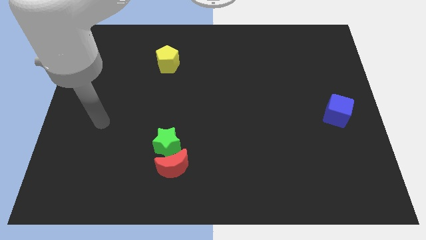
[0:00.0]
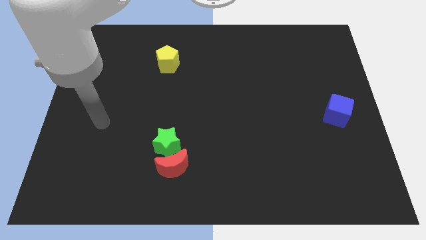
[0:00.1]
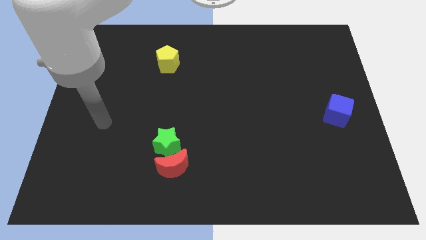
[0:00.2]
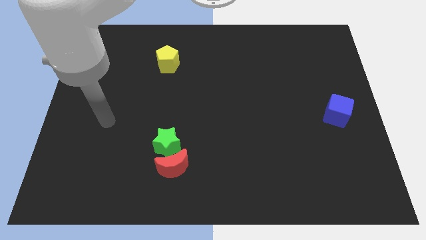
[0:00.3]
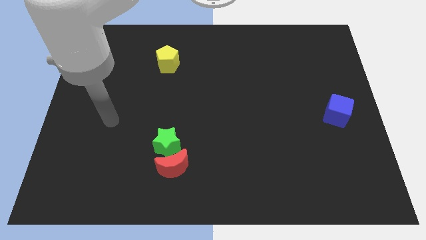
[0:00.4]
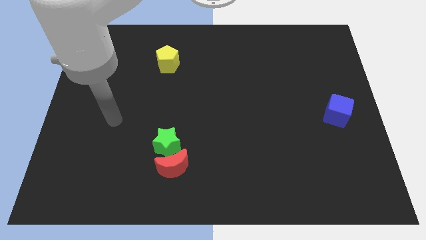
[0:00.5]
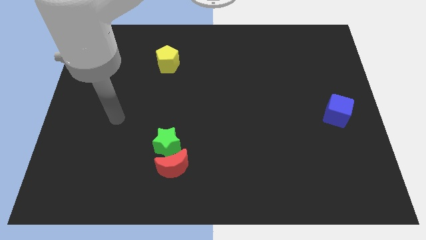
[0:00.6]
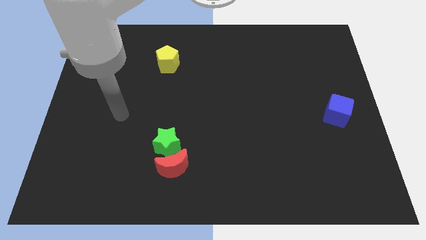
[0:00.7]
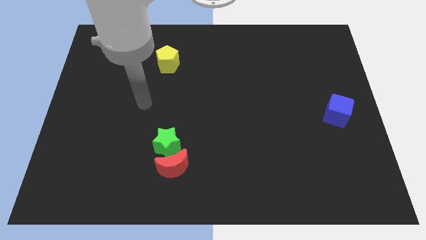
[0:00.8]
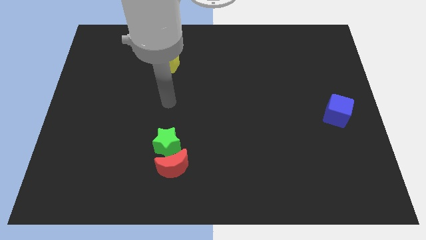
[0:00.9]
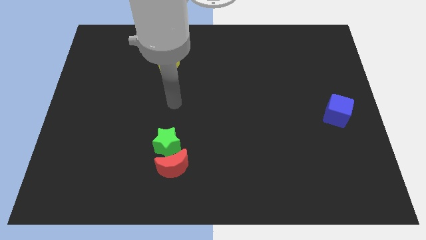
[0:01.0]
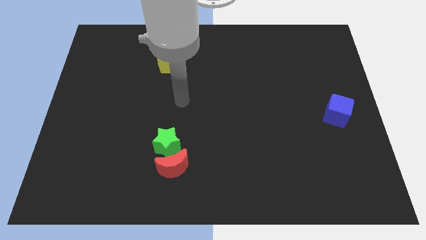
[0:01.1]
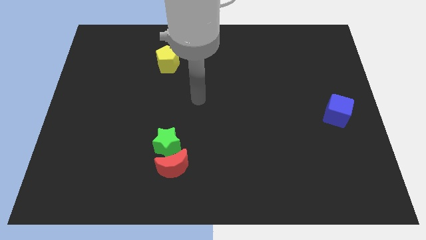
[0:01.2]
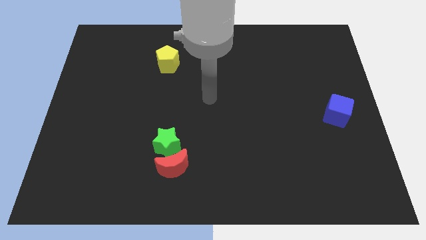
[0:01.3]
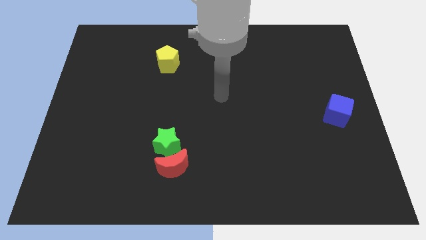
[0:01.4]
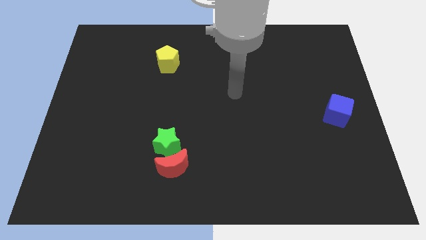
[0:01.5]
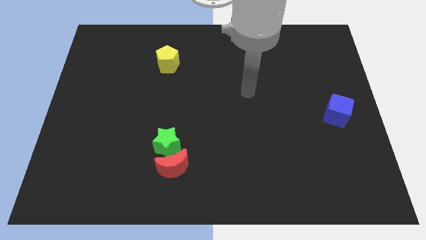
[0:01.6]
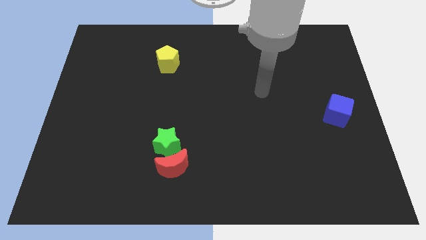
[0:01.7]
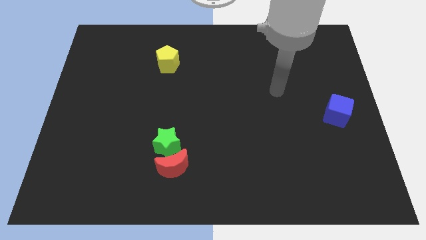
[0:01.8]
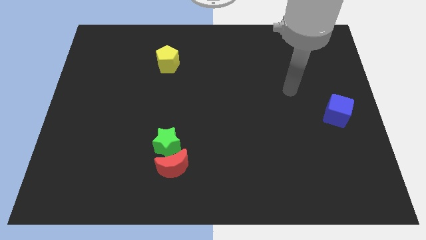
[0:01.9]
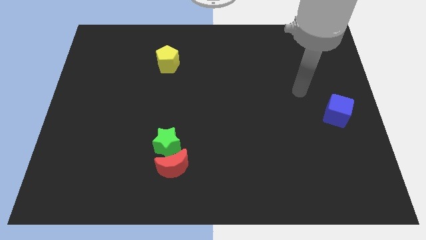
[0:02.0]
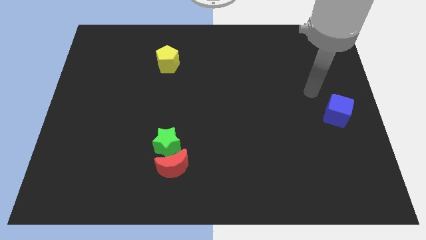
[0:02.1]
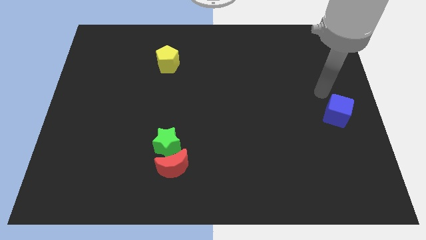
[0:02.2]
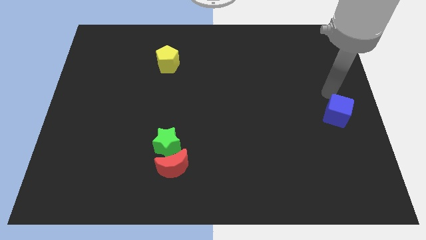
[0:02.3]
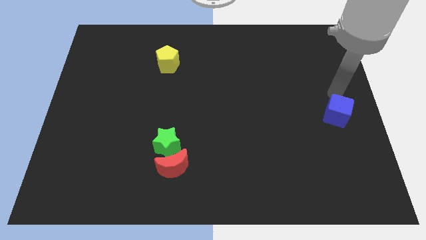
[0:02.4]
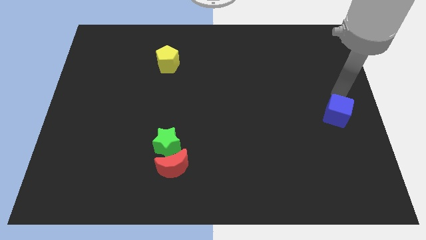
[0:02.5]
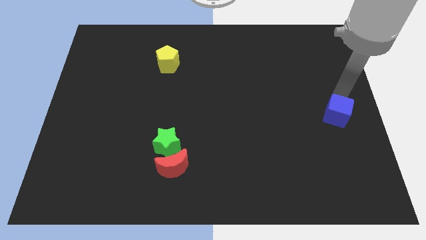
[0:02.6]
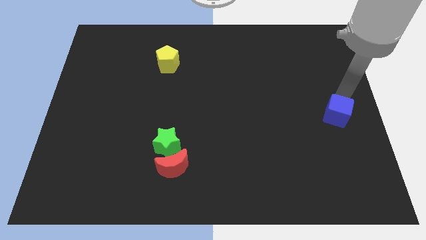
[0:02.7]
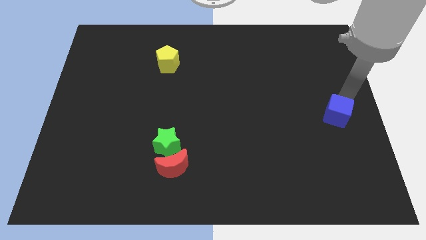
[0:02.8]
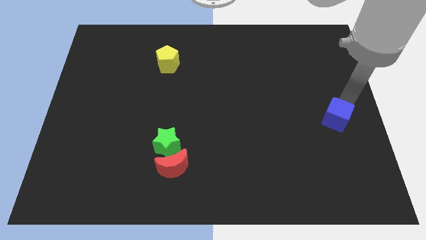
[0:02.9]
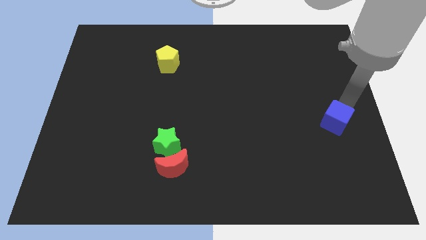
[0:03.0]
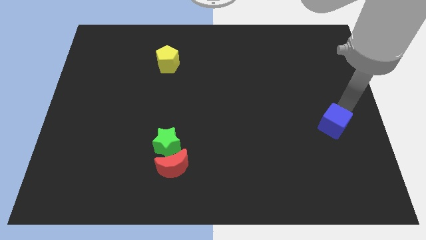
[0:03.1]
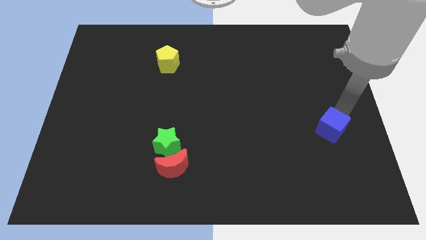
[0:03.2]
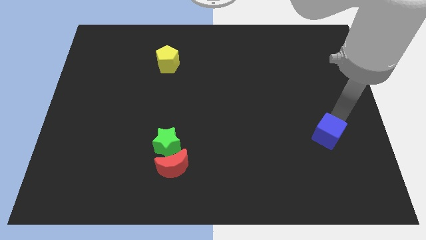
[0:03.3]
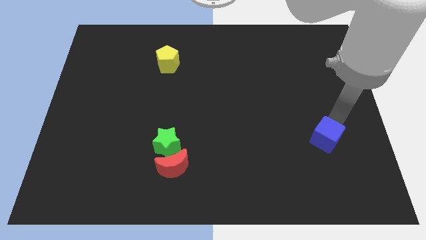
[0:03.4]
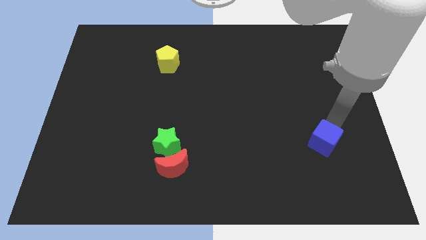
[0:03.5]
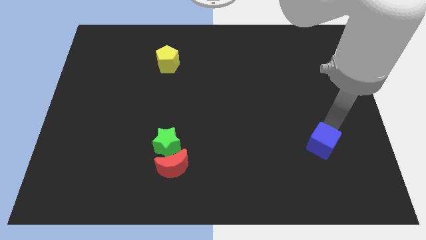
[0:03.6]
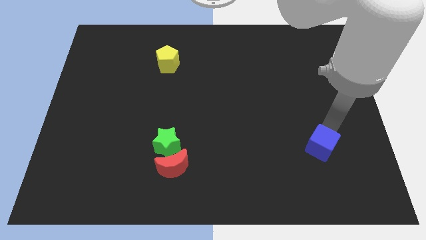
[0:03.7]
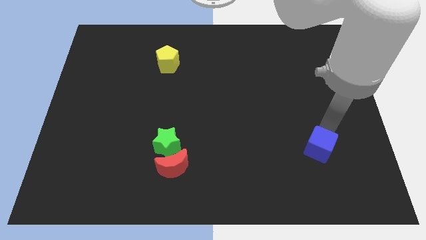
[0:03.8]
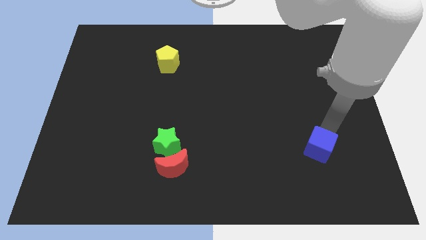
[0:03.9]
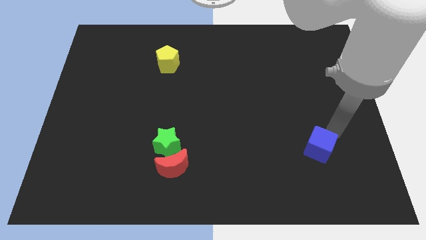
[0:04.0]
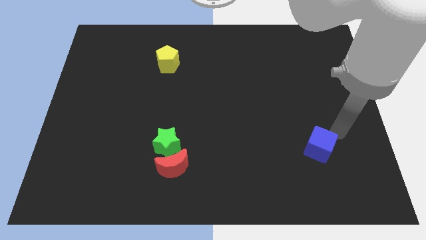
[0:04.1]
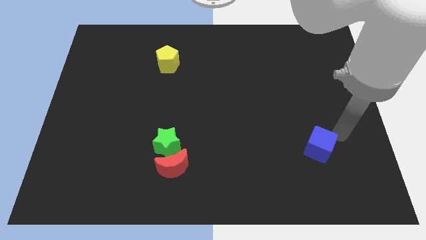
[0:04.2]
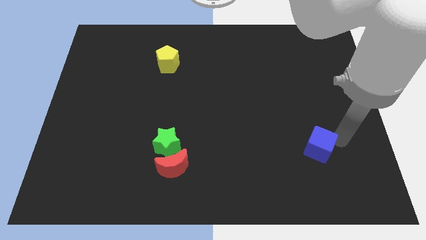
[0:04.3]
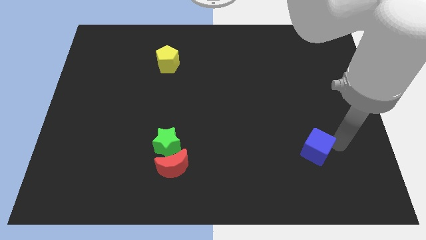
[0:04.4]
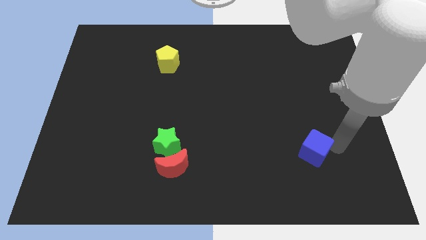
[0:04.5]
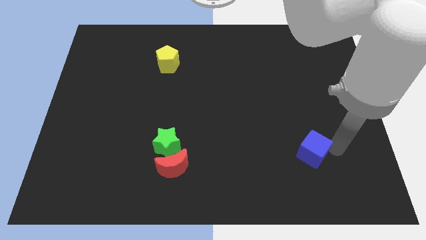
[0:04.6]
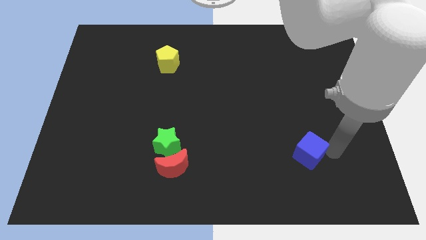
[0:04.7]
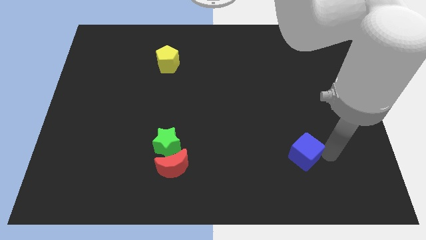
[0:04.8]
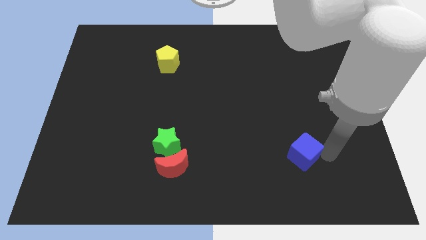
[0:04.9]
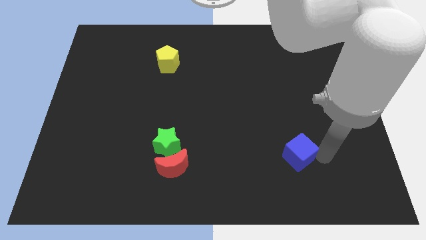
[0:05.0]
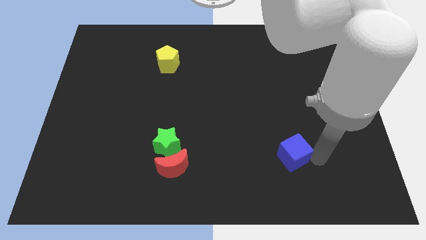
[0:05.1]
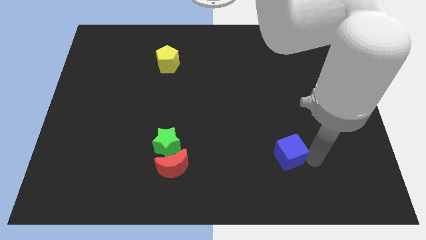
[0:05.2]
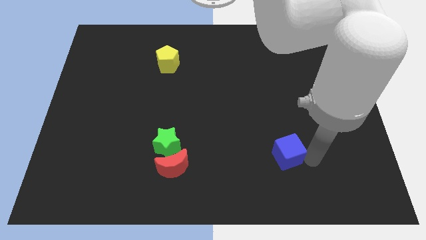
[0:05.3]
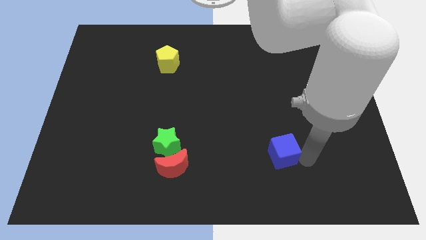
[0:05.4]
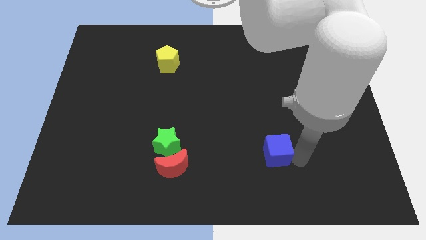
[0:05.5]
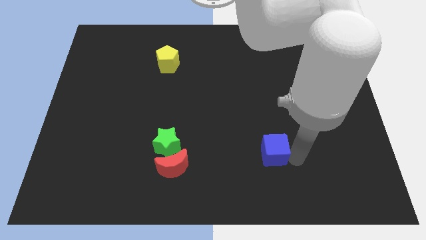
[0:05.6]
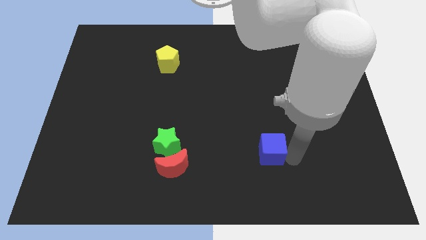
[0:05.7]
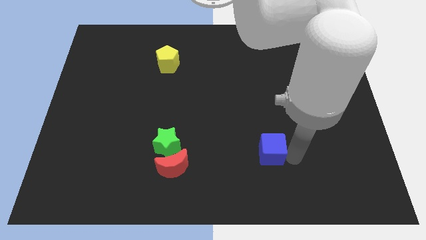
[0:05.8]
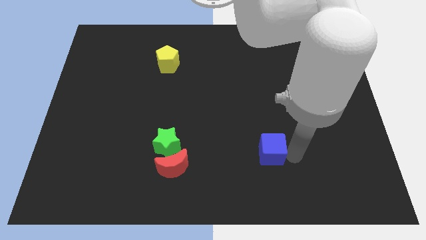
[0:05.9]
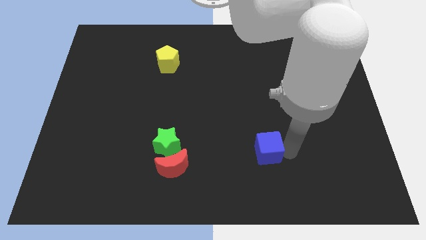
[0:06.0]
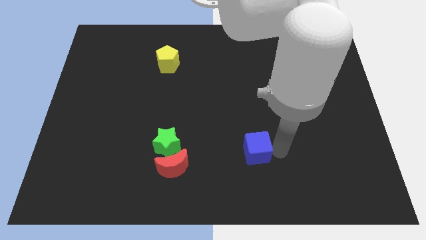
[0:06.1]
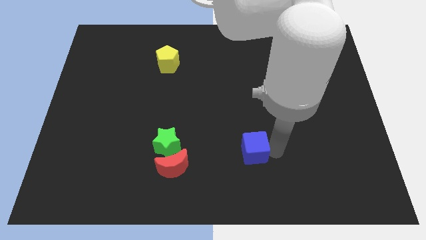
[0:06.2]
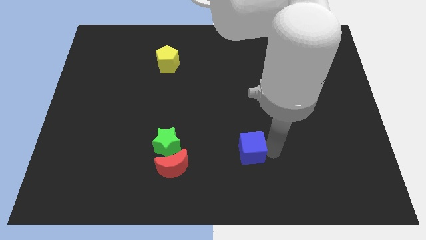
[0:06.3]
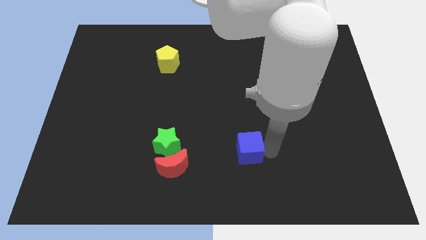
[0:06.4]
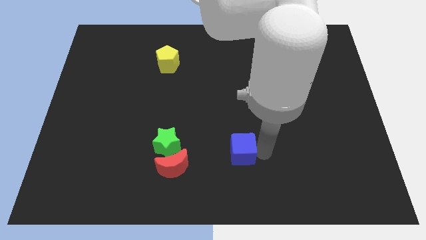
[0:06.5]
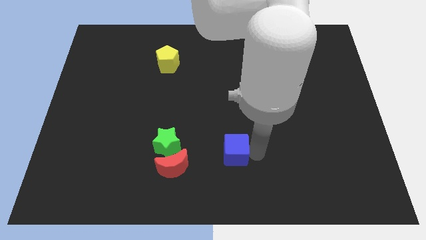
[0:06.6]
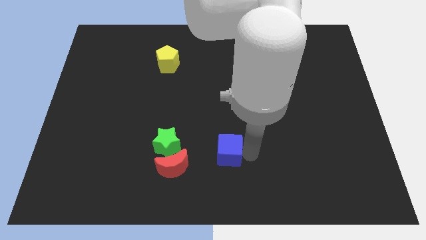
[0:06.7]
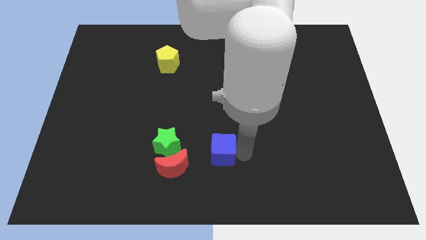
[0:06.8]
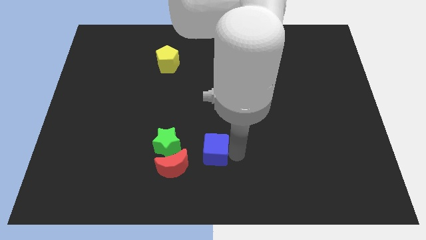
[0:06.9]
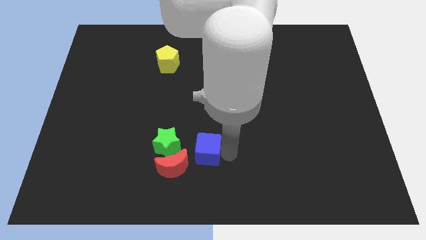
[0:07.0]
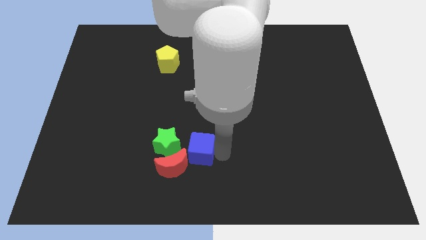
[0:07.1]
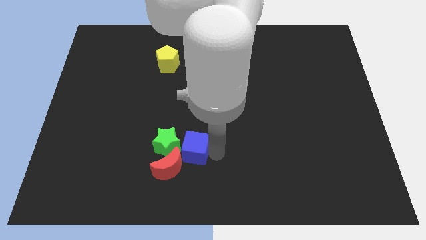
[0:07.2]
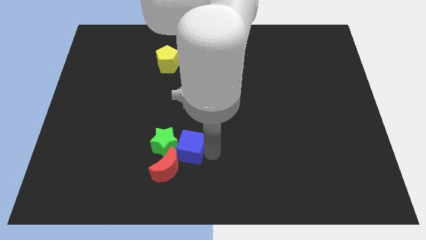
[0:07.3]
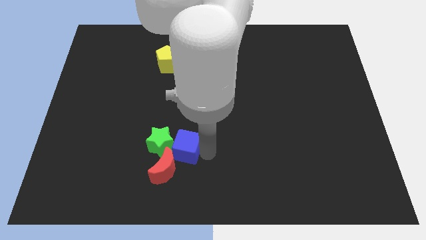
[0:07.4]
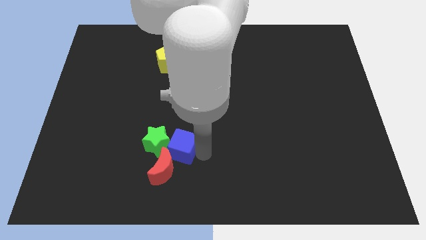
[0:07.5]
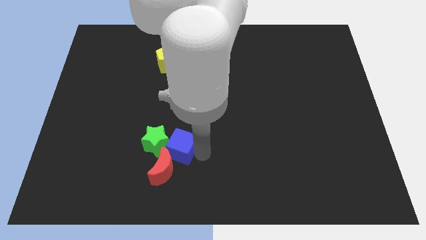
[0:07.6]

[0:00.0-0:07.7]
move the blue block to the moon

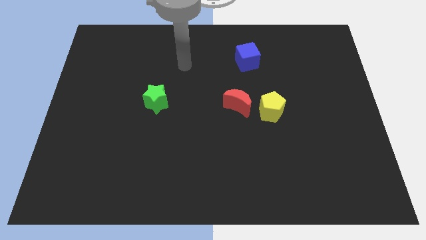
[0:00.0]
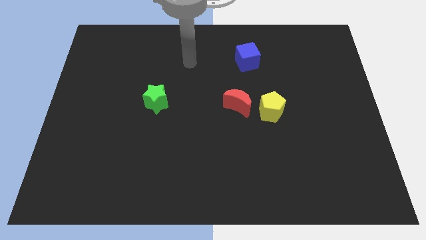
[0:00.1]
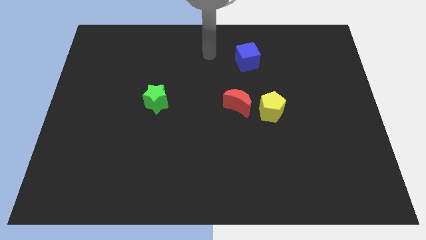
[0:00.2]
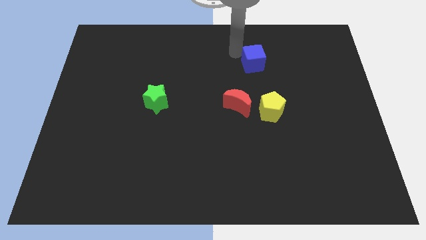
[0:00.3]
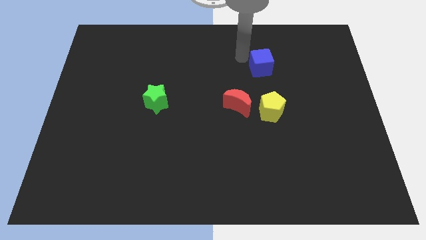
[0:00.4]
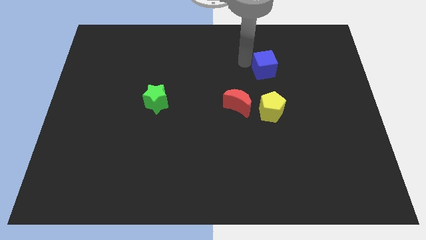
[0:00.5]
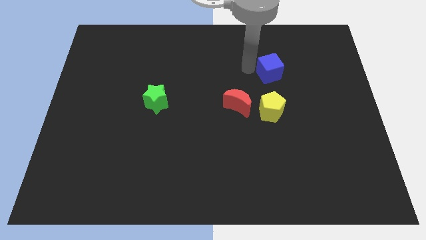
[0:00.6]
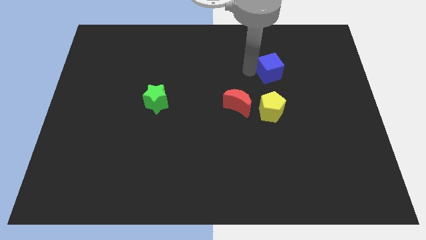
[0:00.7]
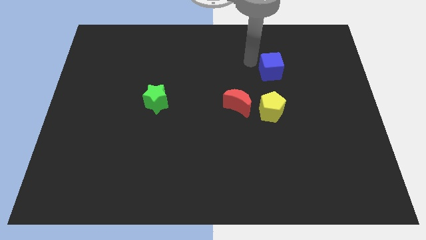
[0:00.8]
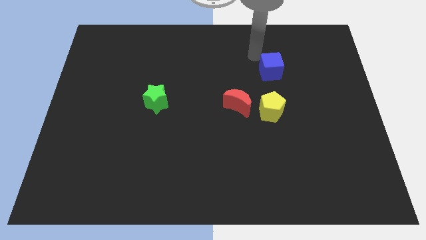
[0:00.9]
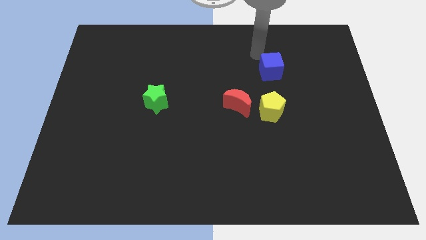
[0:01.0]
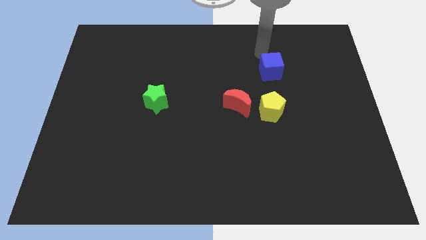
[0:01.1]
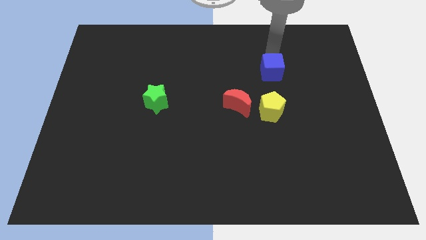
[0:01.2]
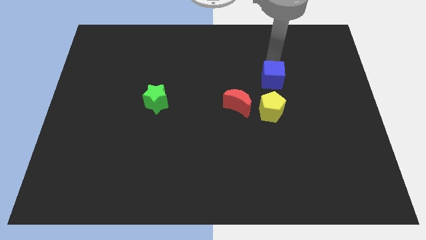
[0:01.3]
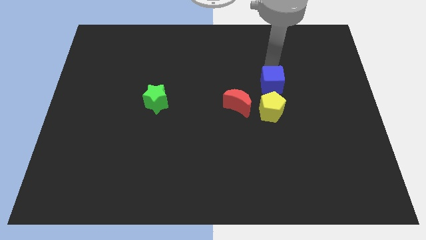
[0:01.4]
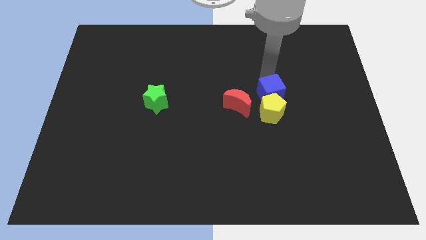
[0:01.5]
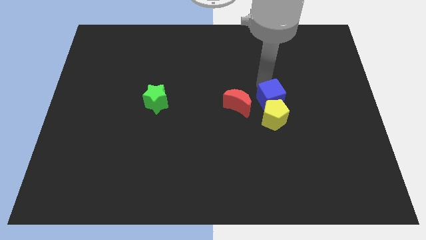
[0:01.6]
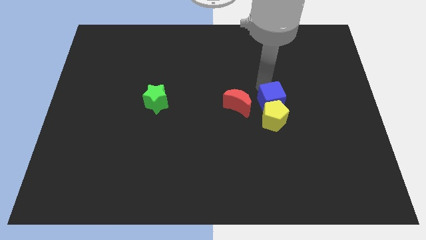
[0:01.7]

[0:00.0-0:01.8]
move the blue cube close to the yellow pentagon
